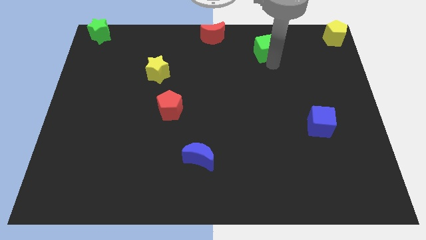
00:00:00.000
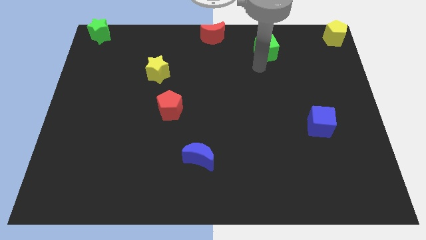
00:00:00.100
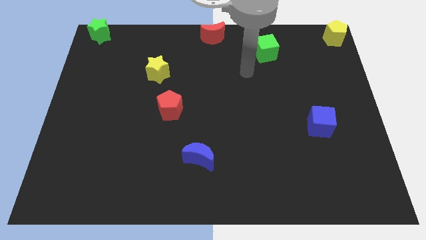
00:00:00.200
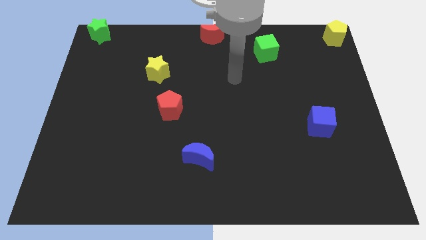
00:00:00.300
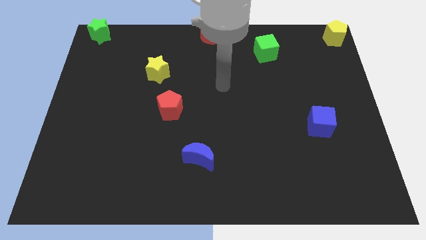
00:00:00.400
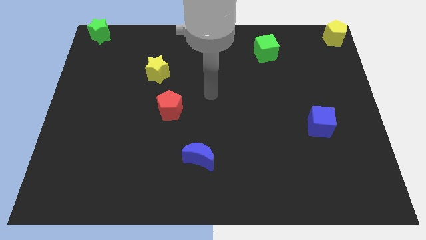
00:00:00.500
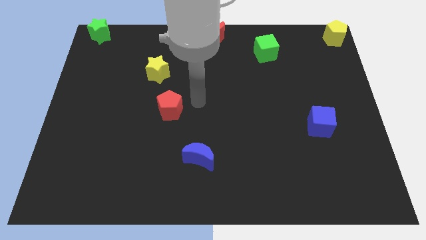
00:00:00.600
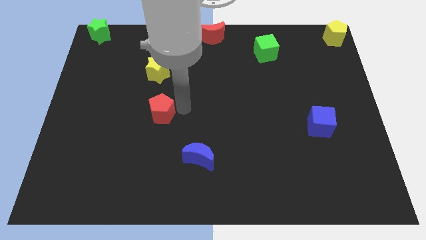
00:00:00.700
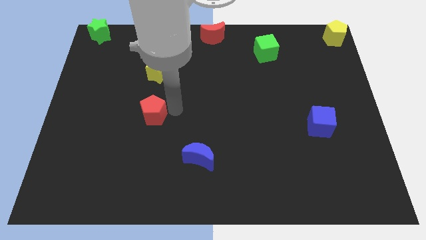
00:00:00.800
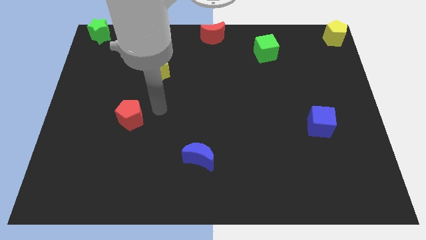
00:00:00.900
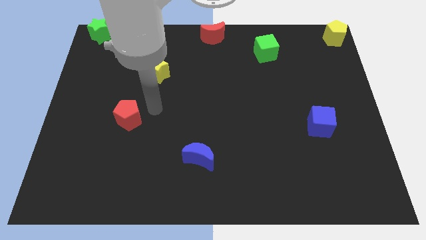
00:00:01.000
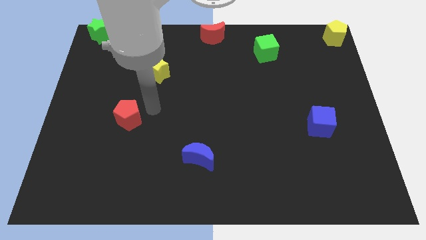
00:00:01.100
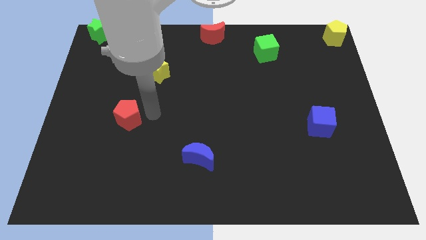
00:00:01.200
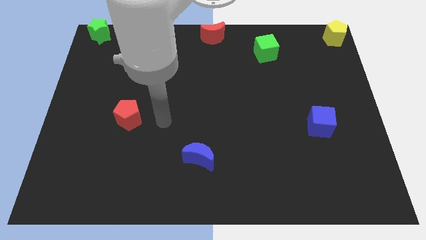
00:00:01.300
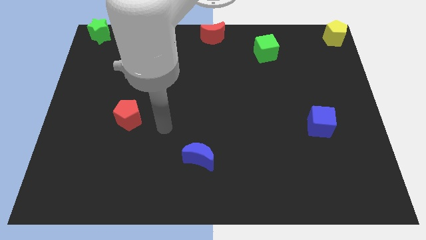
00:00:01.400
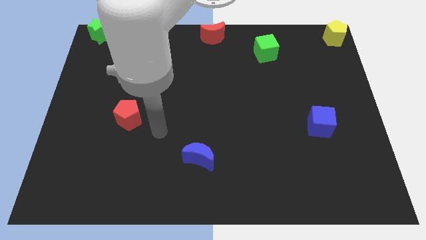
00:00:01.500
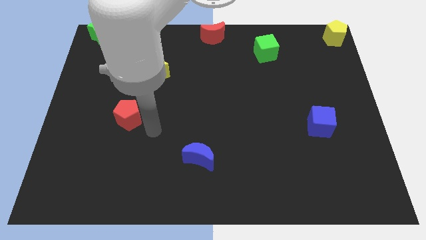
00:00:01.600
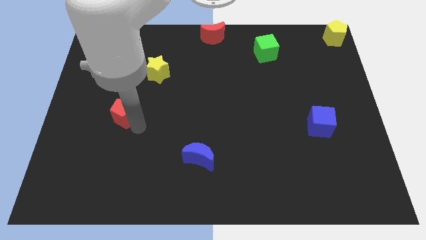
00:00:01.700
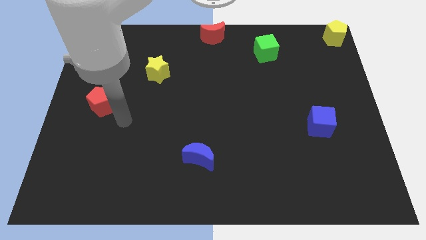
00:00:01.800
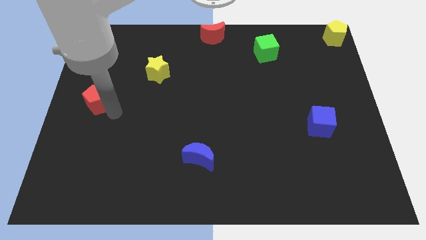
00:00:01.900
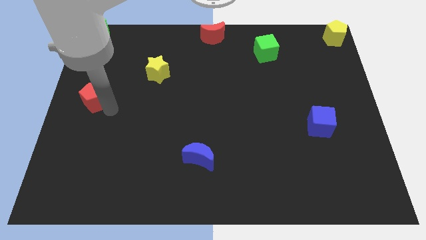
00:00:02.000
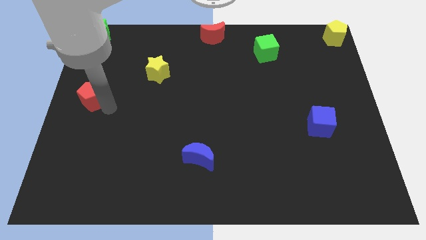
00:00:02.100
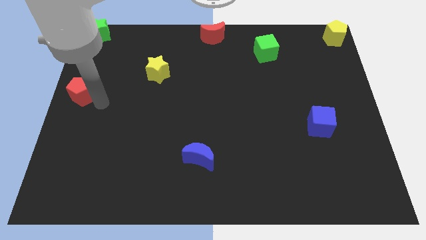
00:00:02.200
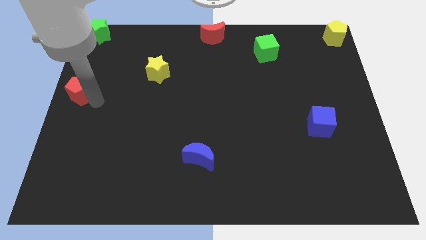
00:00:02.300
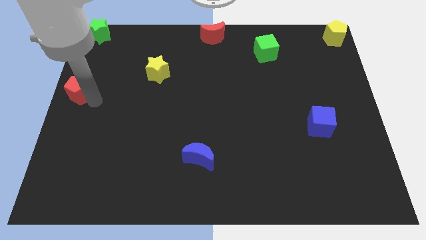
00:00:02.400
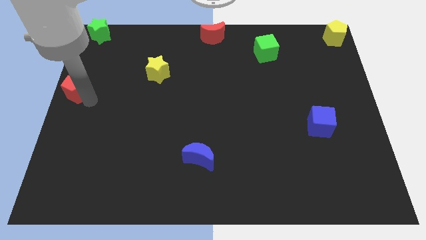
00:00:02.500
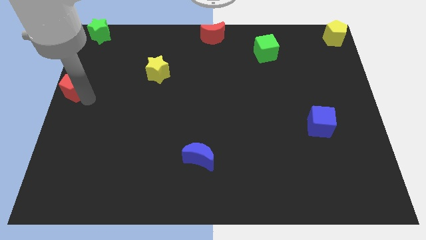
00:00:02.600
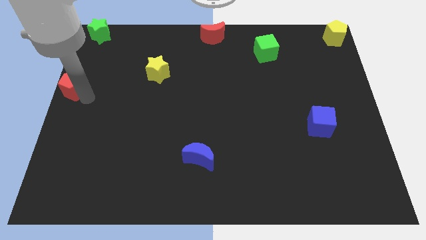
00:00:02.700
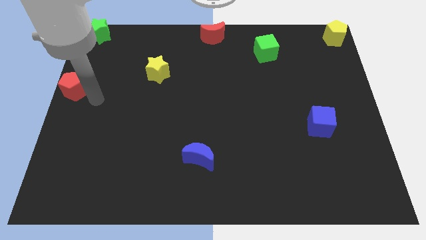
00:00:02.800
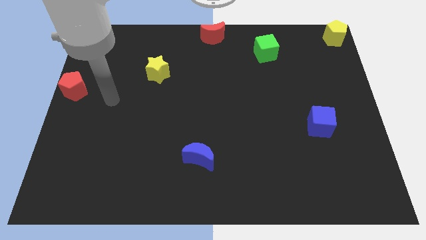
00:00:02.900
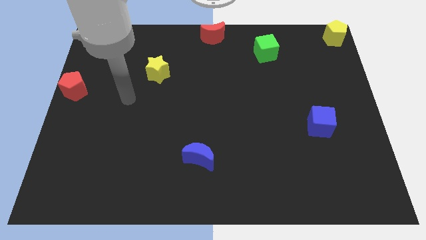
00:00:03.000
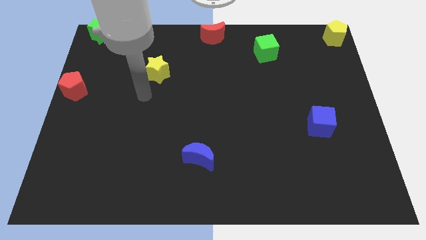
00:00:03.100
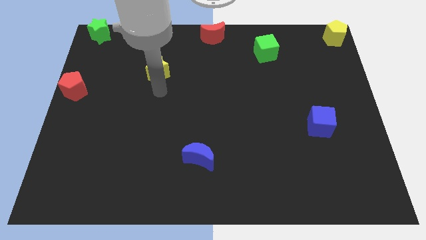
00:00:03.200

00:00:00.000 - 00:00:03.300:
push the red pentagon to the center left side of the board

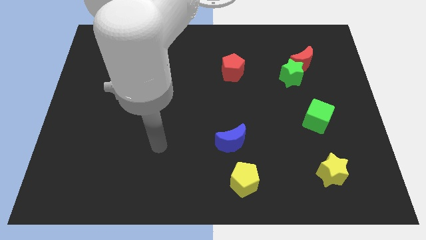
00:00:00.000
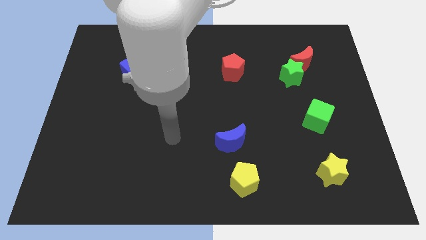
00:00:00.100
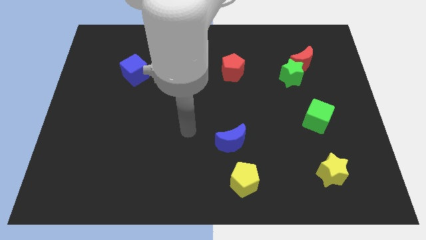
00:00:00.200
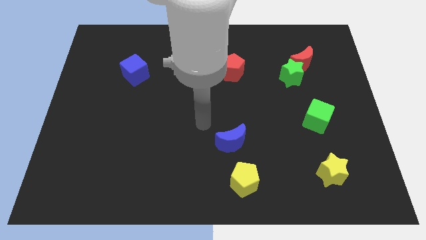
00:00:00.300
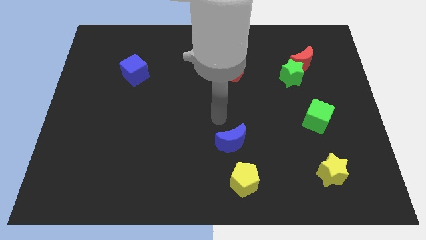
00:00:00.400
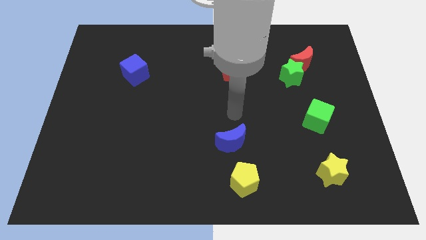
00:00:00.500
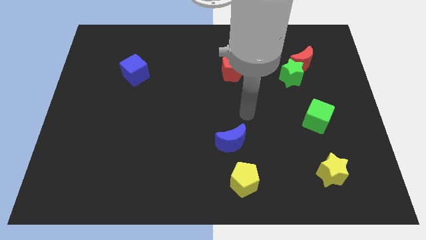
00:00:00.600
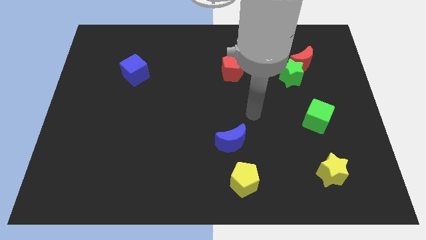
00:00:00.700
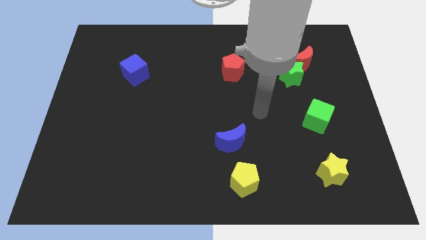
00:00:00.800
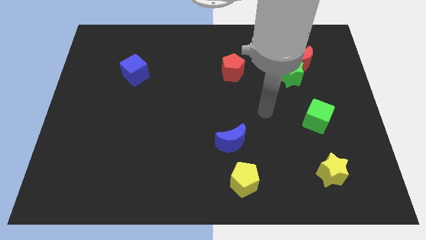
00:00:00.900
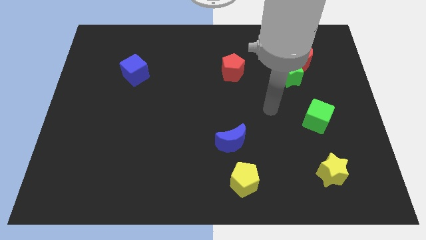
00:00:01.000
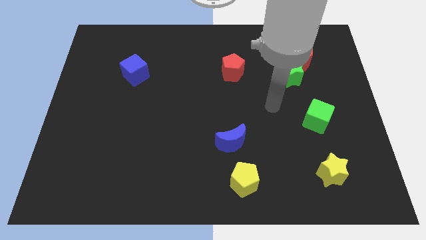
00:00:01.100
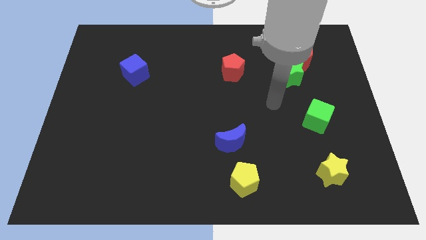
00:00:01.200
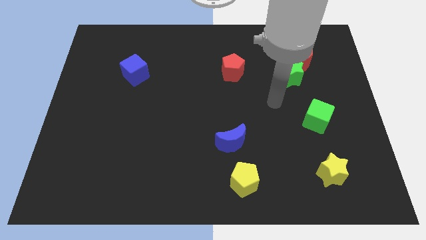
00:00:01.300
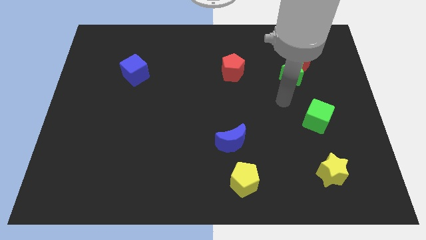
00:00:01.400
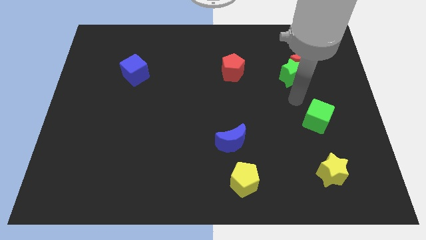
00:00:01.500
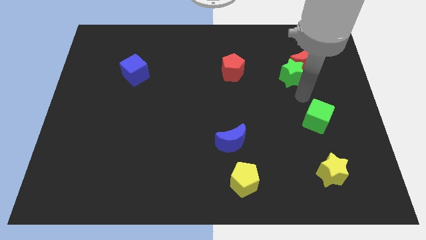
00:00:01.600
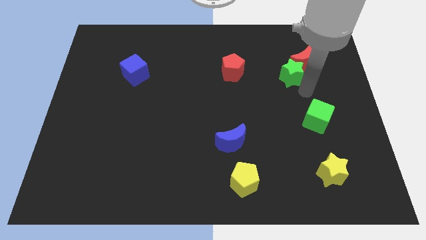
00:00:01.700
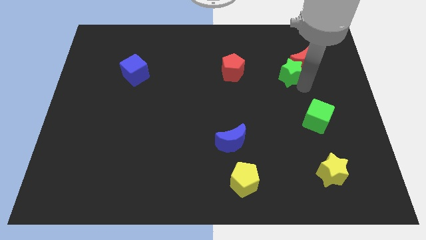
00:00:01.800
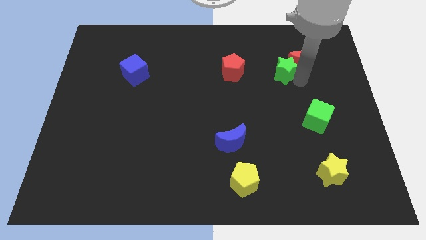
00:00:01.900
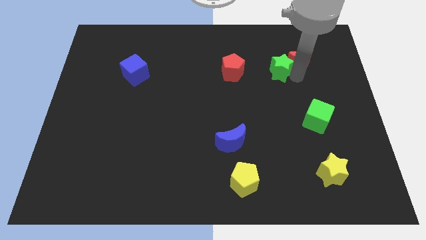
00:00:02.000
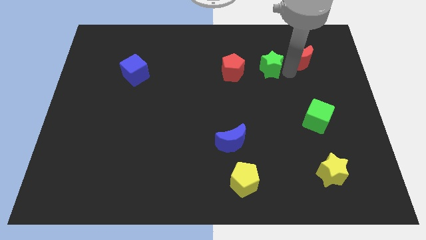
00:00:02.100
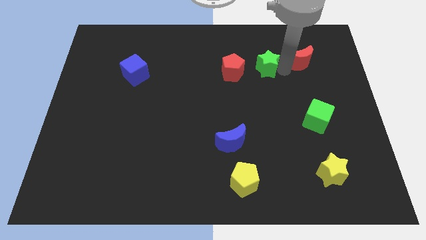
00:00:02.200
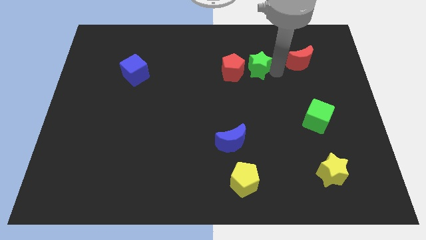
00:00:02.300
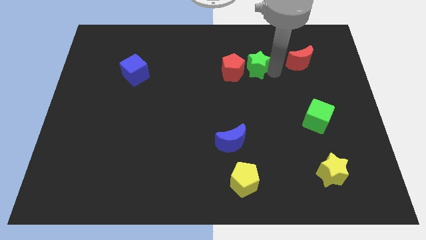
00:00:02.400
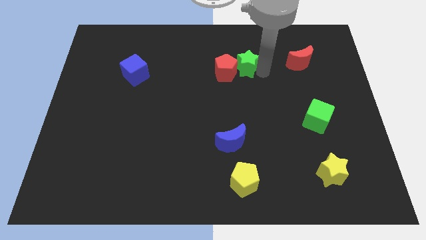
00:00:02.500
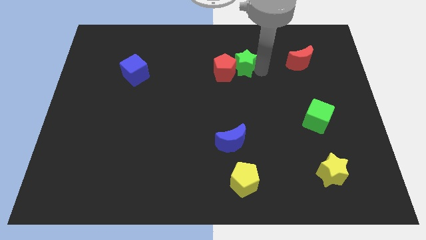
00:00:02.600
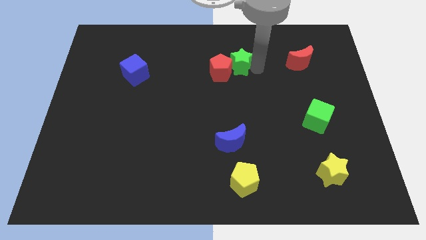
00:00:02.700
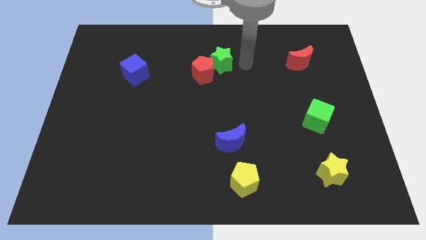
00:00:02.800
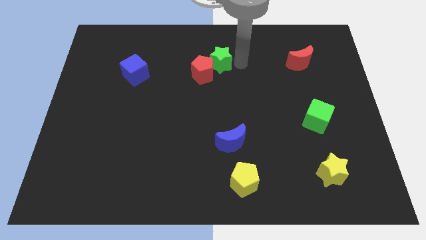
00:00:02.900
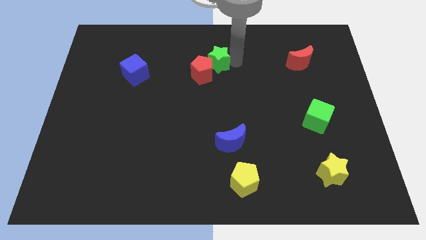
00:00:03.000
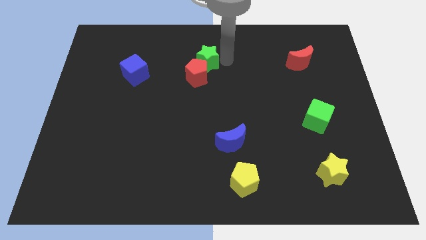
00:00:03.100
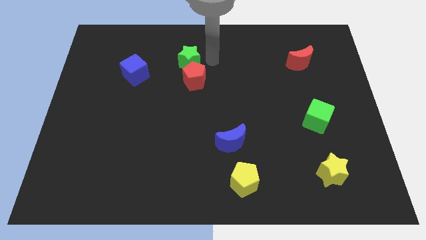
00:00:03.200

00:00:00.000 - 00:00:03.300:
push the green star and red pentagon to the left side of the table

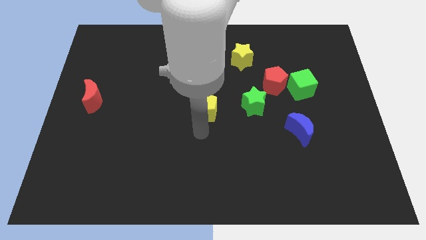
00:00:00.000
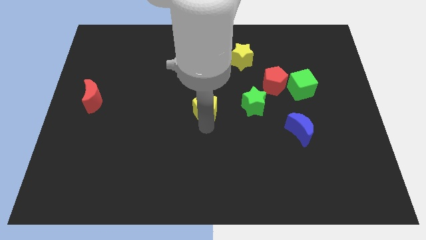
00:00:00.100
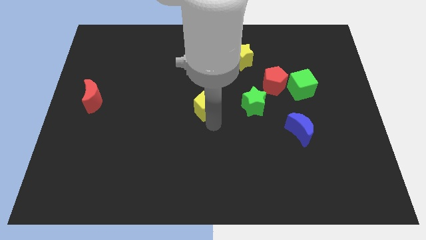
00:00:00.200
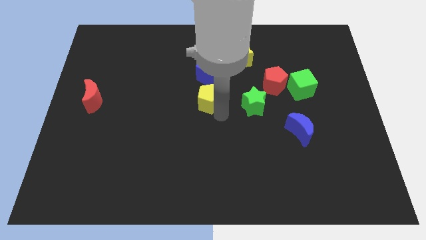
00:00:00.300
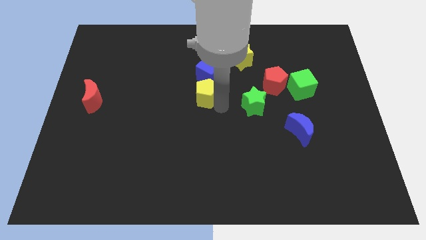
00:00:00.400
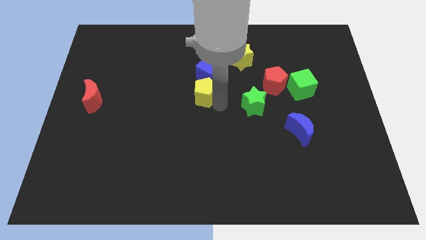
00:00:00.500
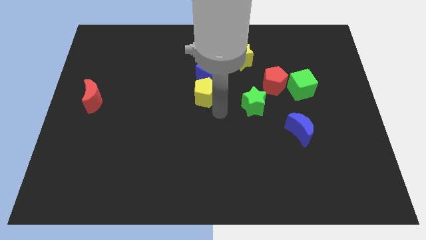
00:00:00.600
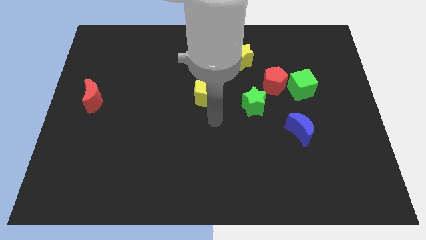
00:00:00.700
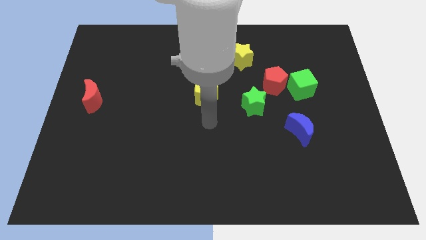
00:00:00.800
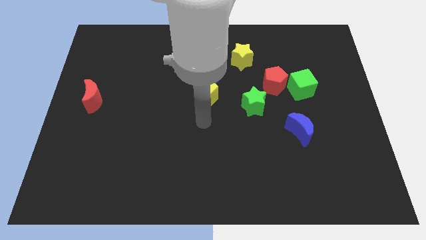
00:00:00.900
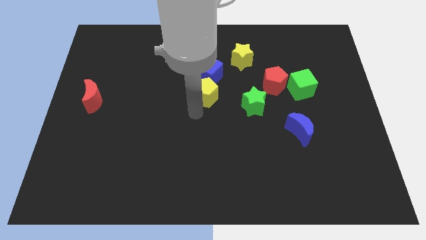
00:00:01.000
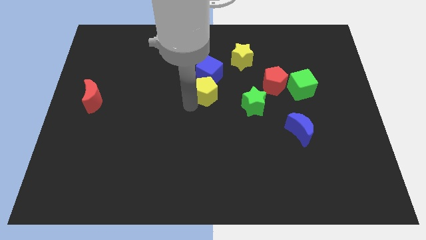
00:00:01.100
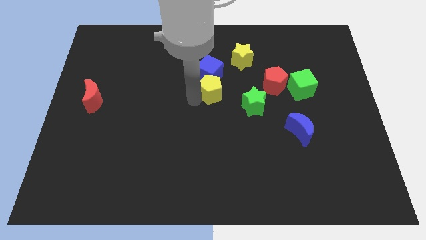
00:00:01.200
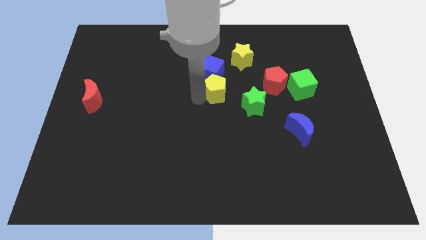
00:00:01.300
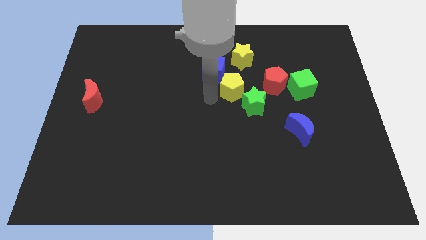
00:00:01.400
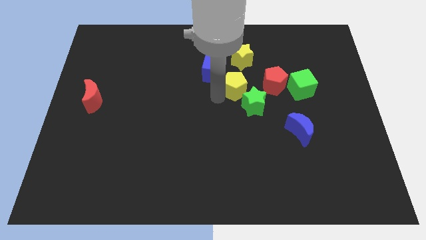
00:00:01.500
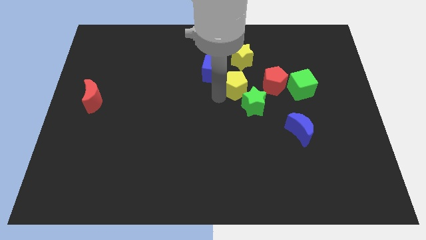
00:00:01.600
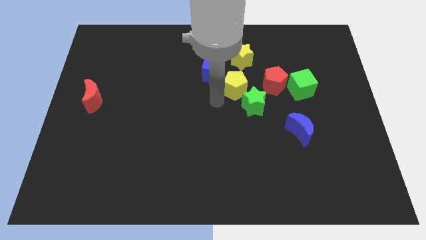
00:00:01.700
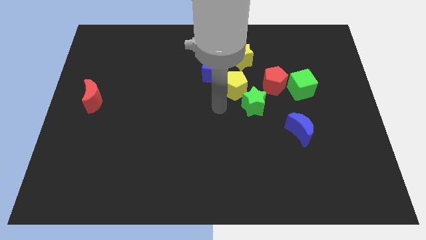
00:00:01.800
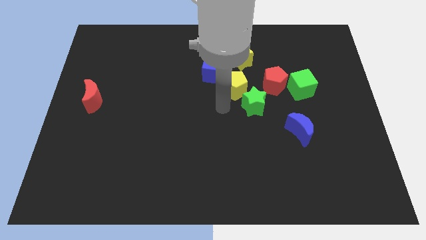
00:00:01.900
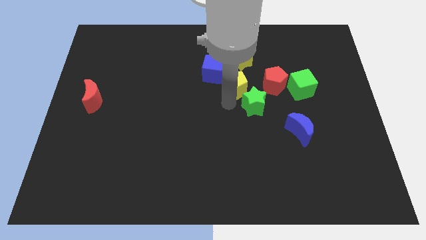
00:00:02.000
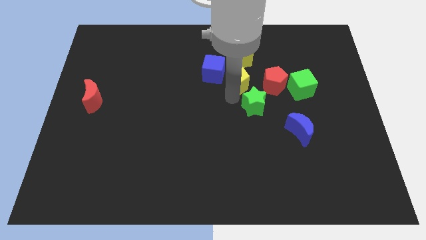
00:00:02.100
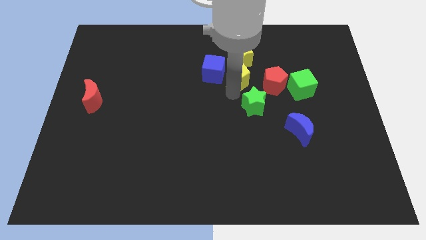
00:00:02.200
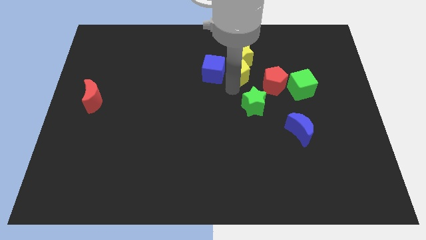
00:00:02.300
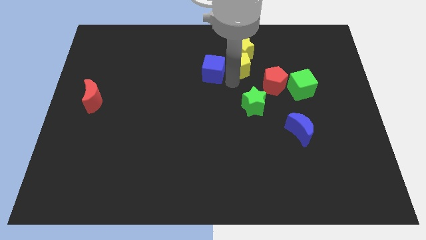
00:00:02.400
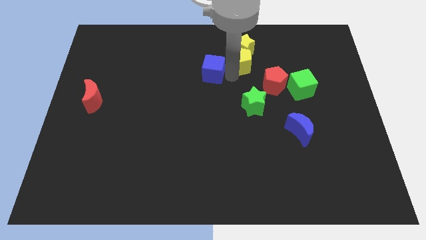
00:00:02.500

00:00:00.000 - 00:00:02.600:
place the yellow pentagon below the yellow star
